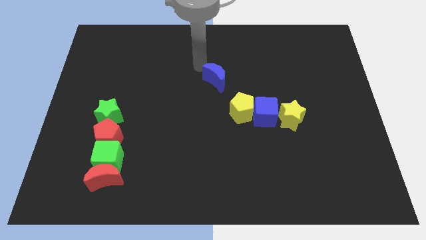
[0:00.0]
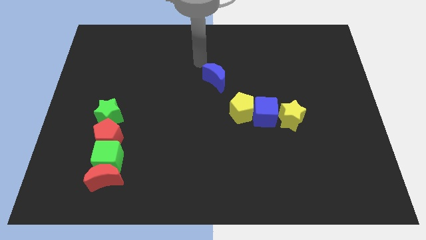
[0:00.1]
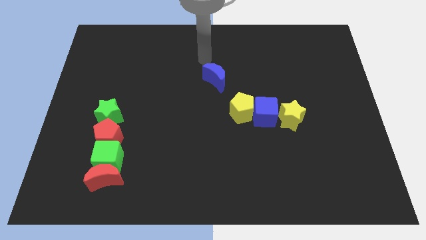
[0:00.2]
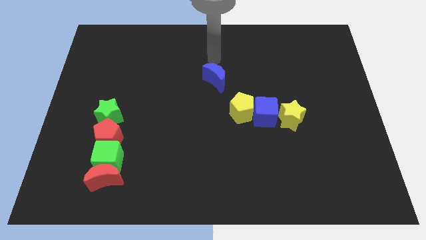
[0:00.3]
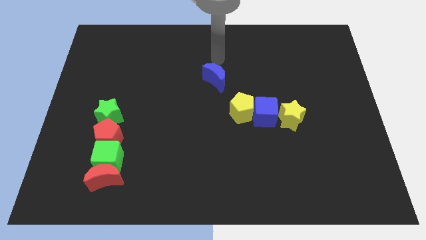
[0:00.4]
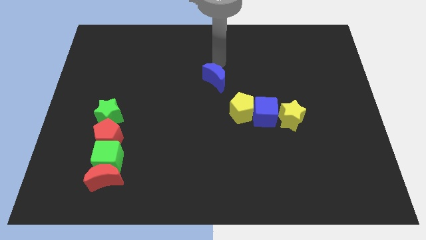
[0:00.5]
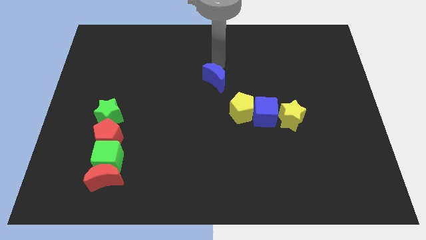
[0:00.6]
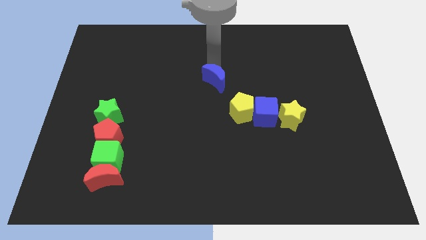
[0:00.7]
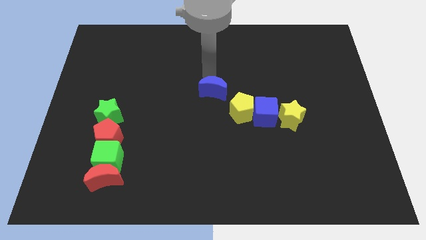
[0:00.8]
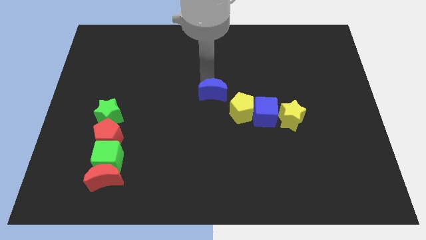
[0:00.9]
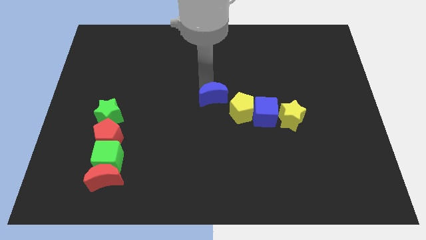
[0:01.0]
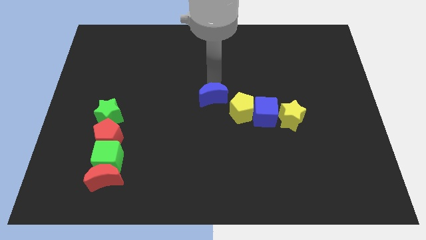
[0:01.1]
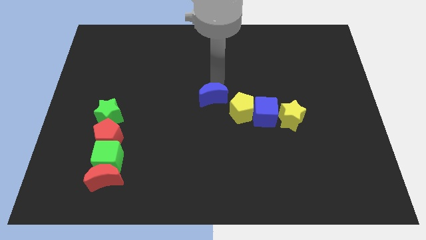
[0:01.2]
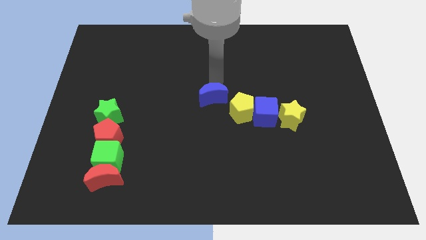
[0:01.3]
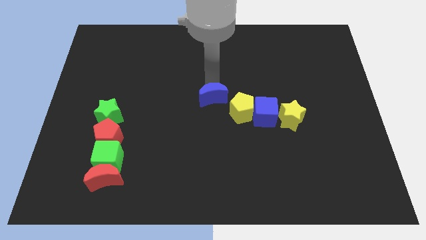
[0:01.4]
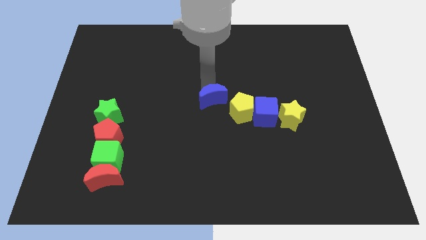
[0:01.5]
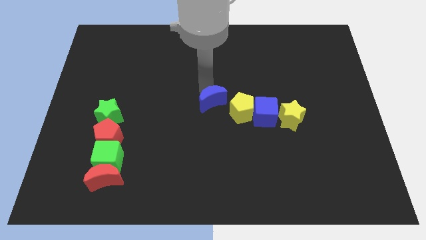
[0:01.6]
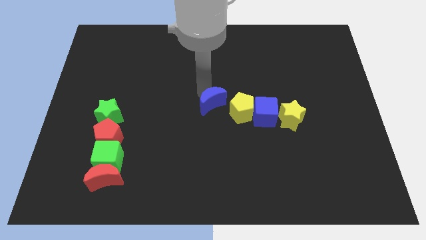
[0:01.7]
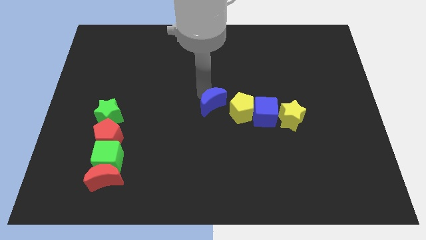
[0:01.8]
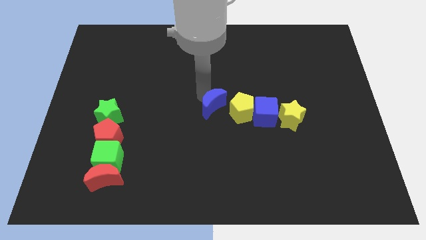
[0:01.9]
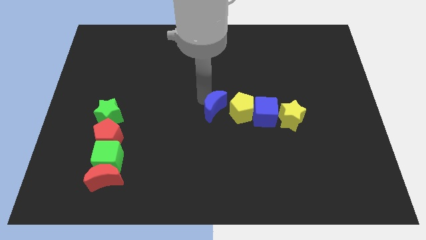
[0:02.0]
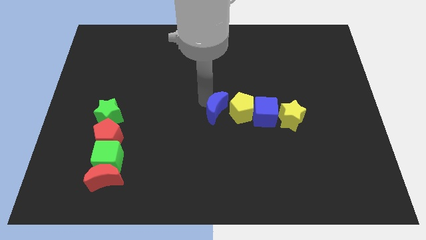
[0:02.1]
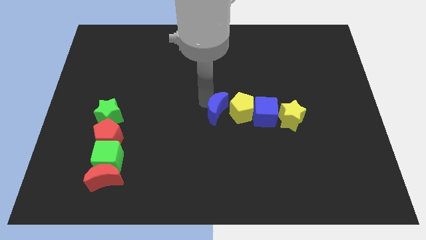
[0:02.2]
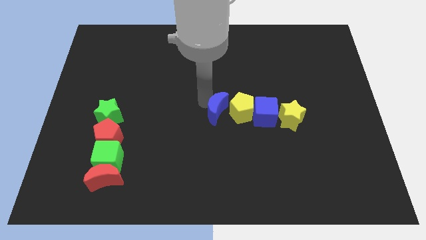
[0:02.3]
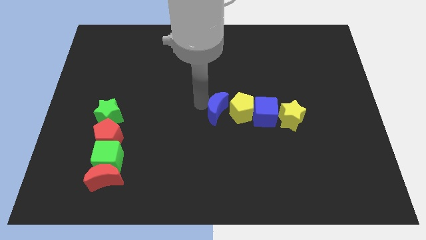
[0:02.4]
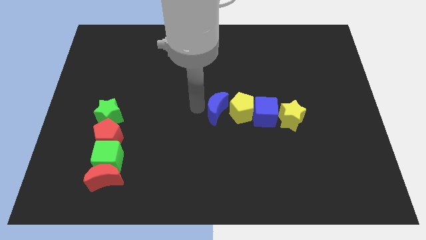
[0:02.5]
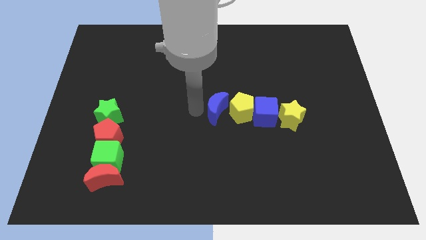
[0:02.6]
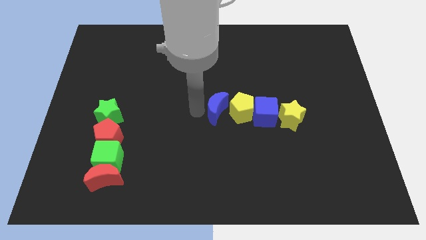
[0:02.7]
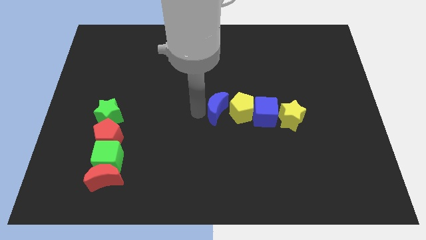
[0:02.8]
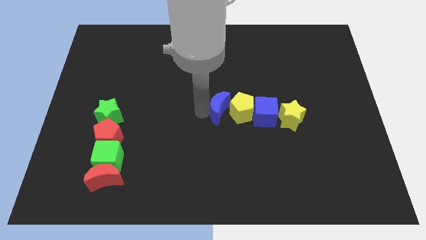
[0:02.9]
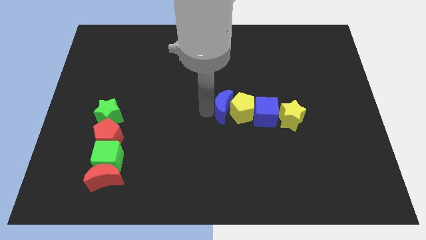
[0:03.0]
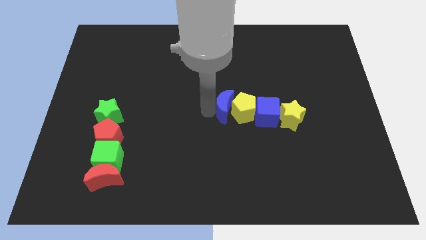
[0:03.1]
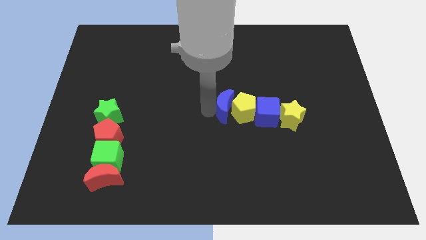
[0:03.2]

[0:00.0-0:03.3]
drag the blue crescent into the left side of the yellow pentagon

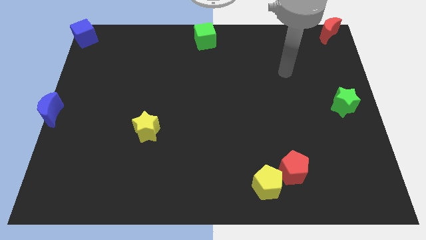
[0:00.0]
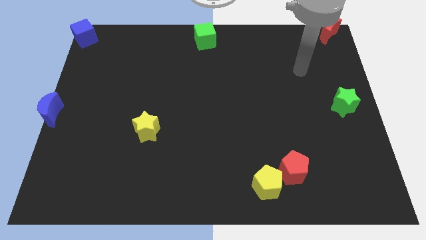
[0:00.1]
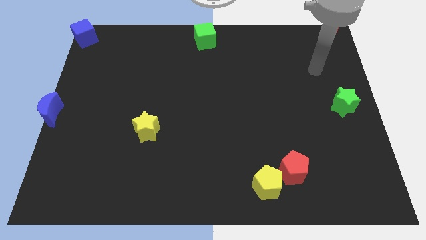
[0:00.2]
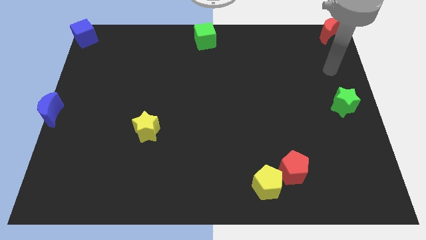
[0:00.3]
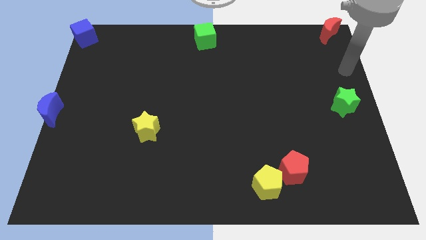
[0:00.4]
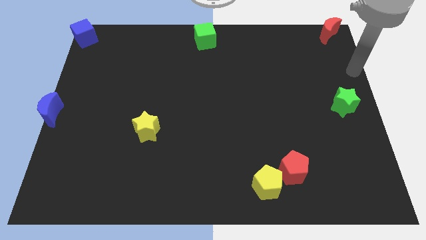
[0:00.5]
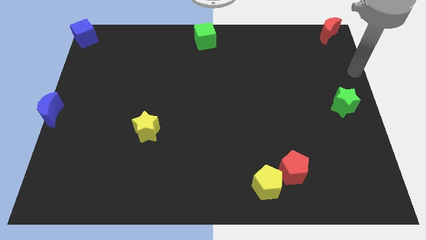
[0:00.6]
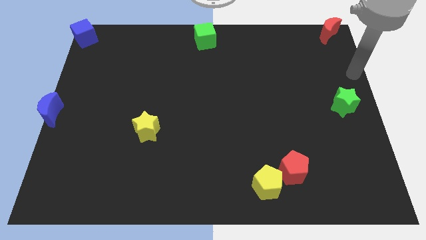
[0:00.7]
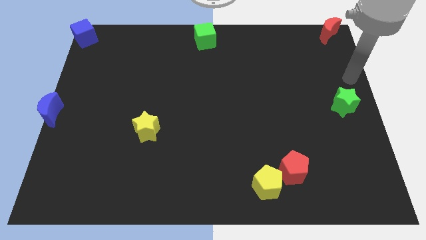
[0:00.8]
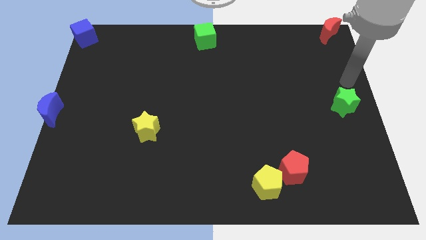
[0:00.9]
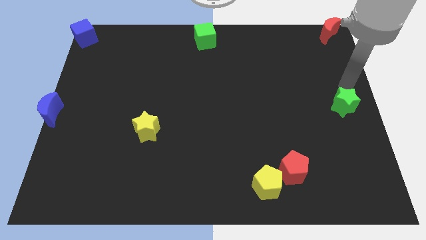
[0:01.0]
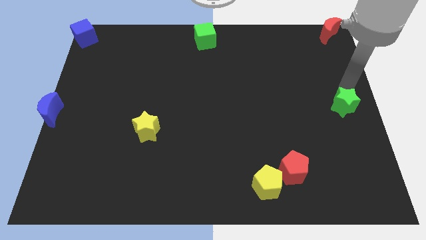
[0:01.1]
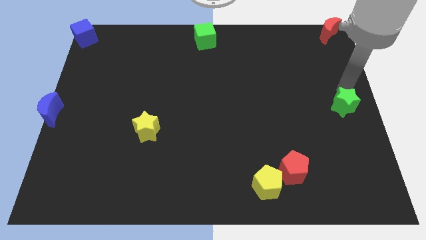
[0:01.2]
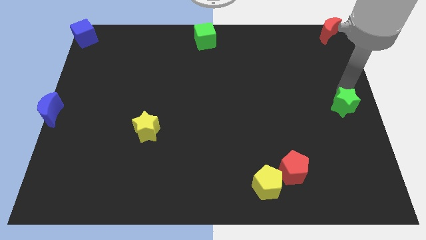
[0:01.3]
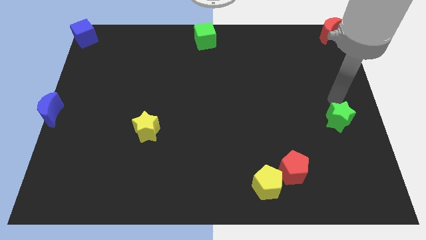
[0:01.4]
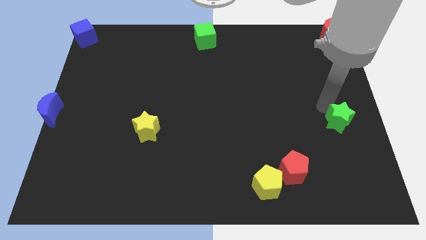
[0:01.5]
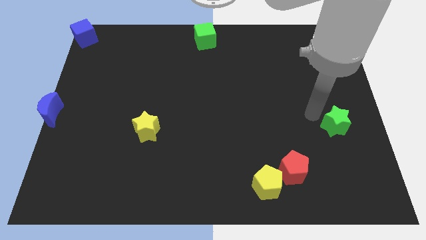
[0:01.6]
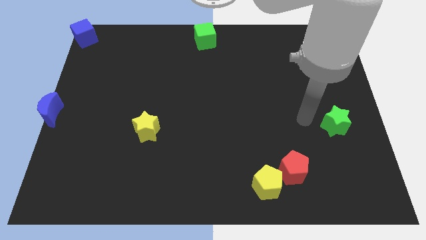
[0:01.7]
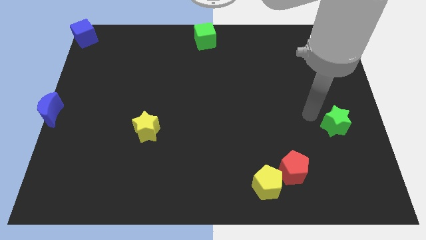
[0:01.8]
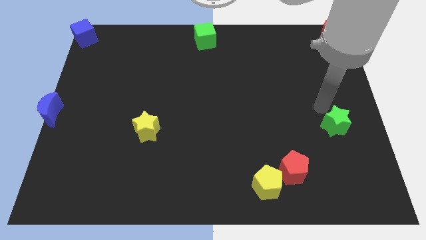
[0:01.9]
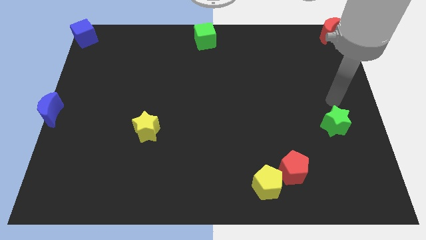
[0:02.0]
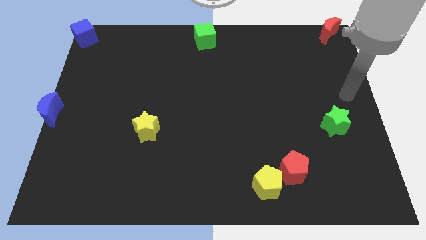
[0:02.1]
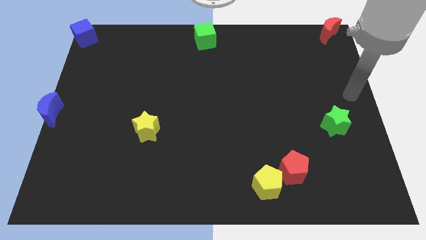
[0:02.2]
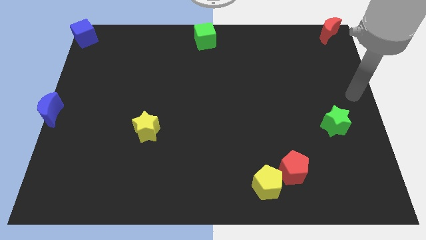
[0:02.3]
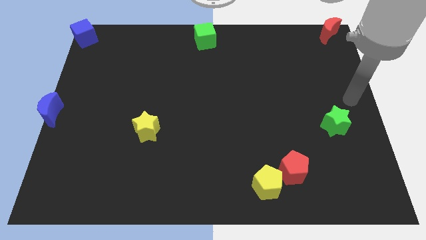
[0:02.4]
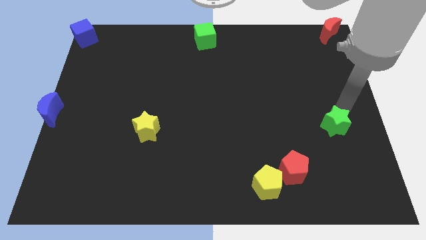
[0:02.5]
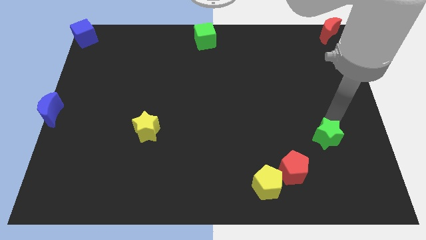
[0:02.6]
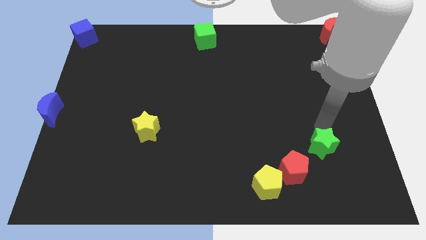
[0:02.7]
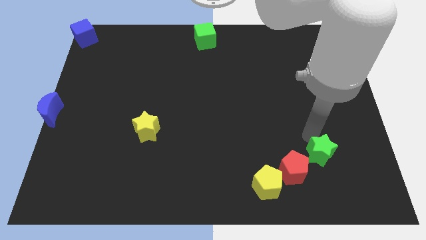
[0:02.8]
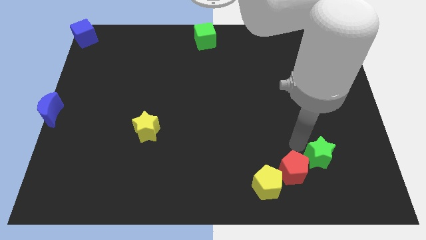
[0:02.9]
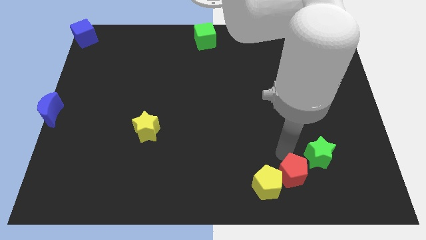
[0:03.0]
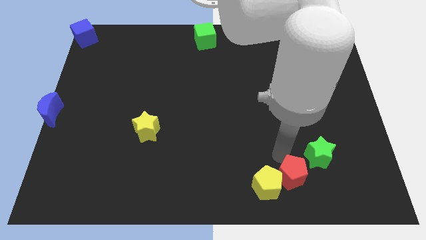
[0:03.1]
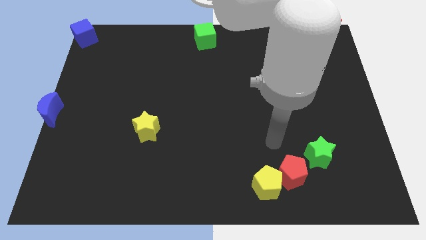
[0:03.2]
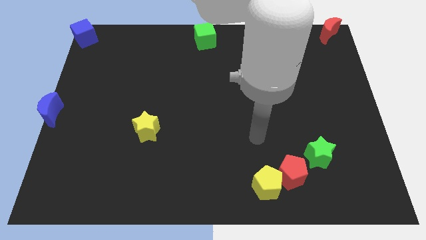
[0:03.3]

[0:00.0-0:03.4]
place the green star diagonally right to the pentagon

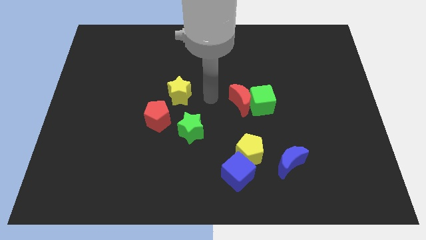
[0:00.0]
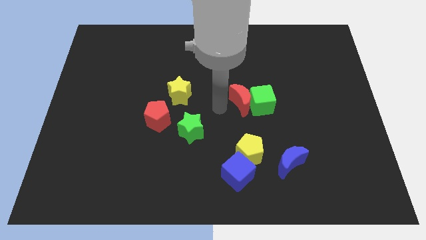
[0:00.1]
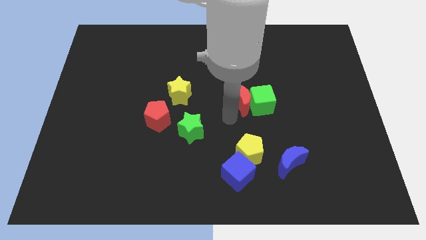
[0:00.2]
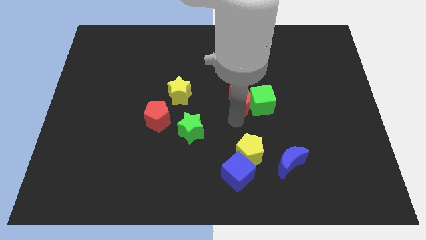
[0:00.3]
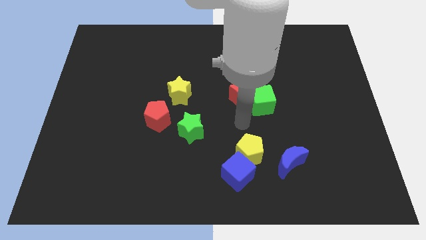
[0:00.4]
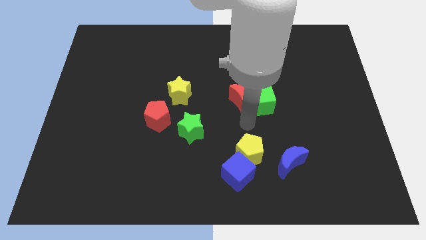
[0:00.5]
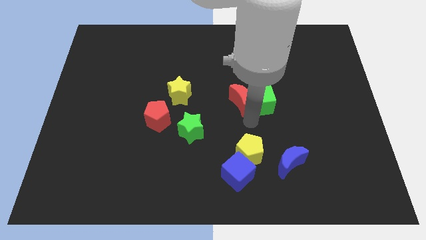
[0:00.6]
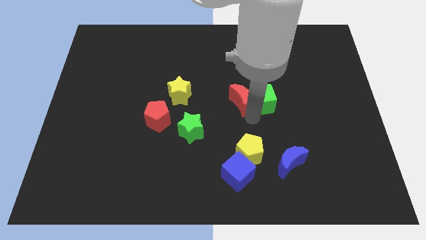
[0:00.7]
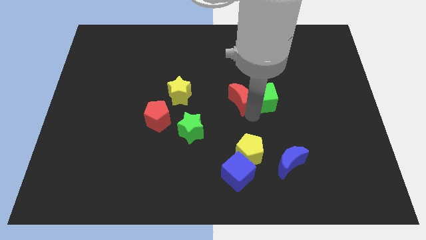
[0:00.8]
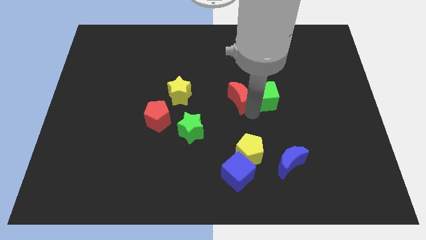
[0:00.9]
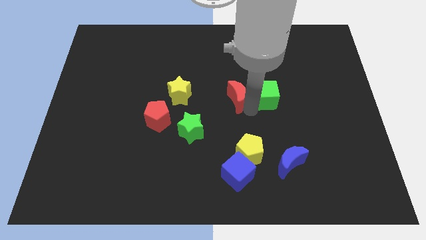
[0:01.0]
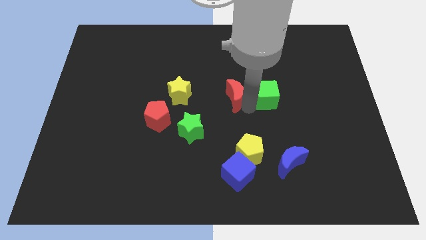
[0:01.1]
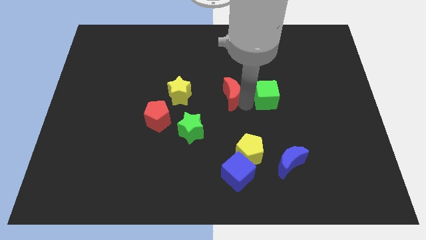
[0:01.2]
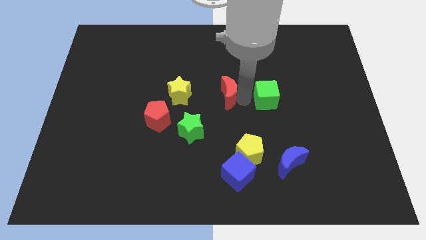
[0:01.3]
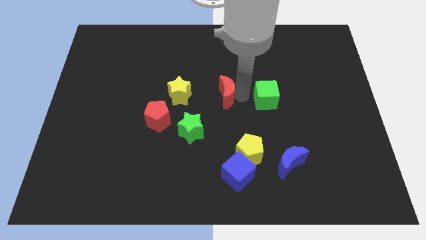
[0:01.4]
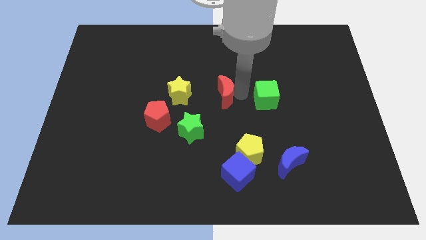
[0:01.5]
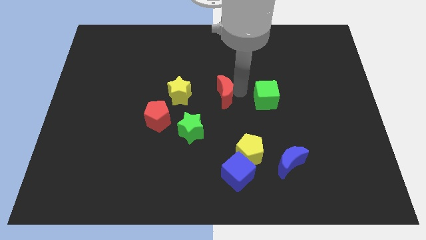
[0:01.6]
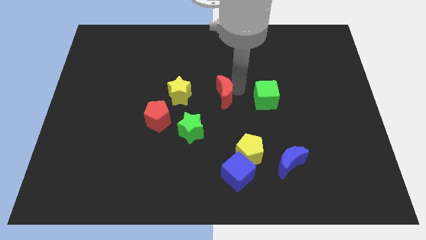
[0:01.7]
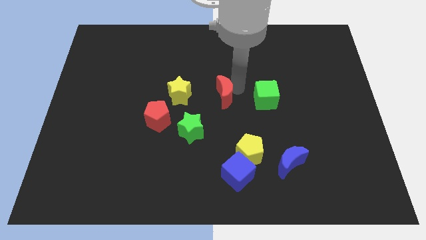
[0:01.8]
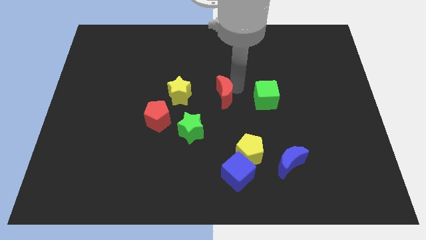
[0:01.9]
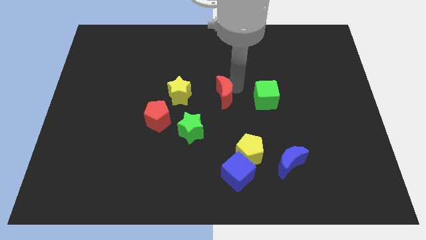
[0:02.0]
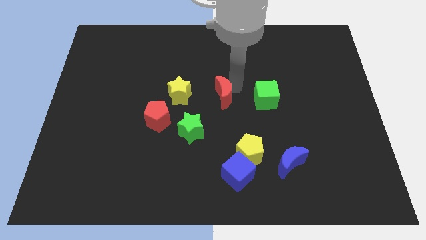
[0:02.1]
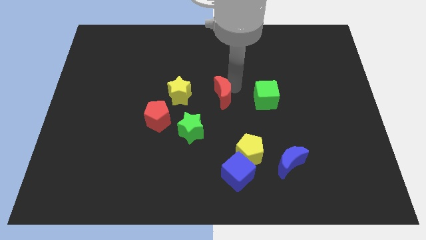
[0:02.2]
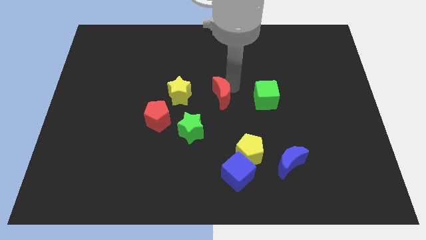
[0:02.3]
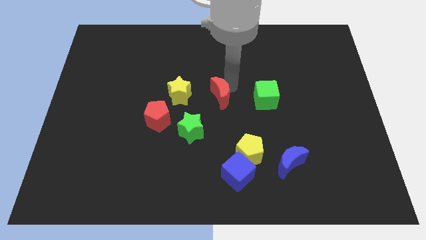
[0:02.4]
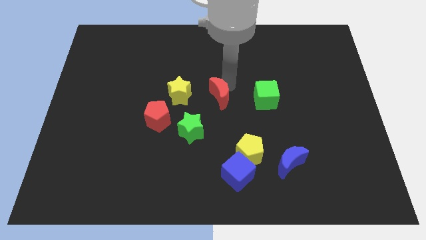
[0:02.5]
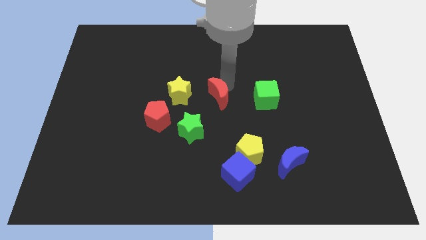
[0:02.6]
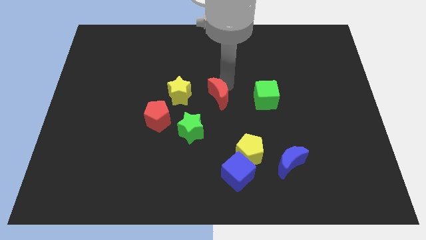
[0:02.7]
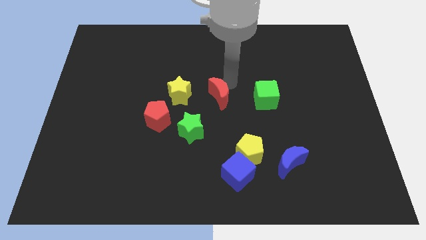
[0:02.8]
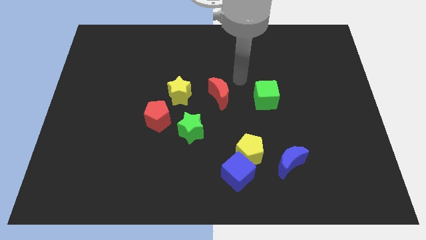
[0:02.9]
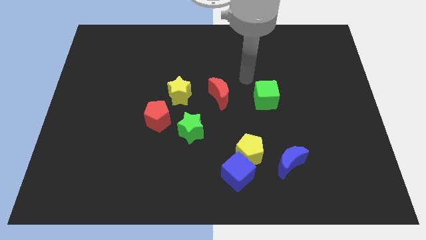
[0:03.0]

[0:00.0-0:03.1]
push the red crescent in between the yellow star and the green cube
